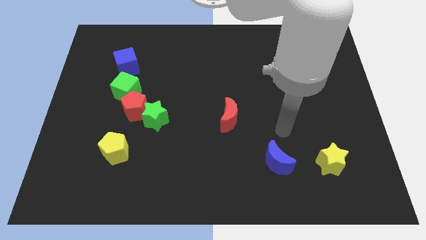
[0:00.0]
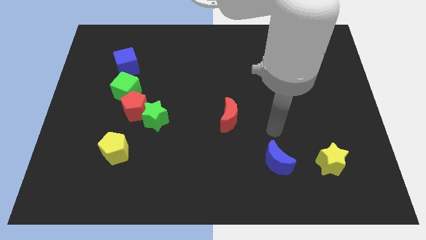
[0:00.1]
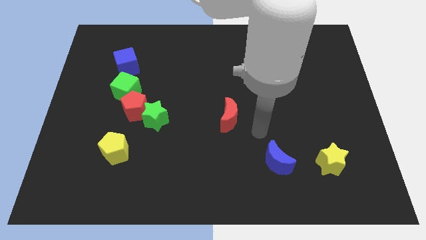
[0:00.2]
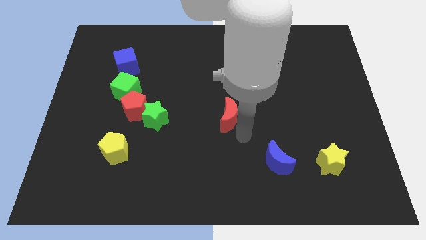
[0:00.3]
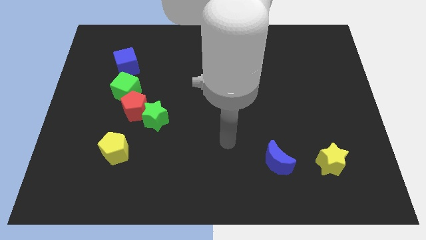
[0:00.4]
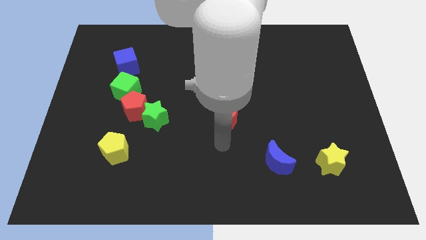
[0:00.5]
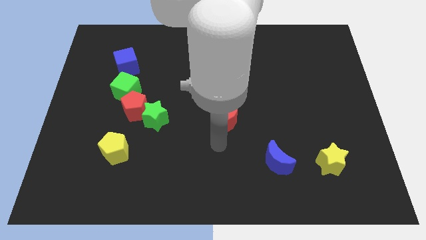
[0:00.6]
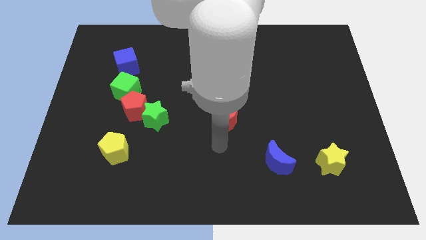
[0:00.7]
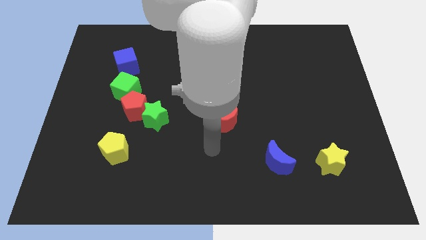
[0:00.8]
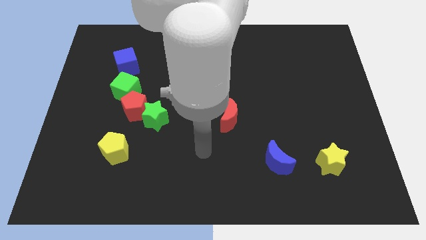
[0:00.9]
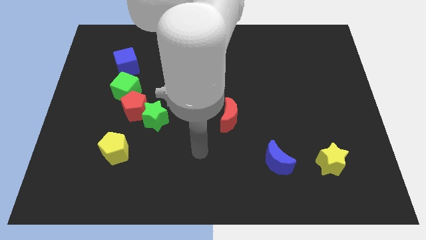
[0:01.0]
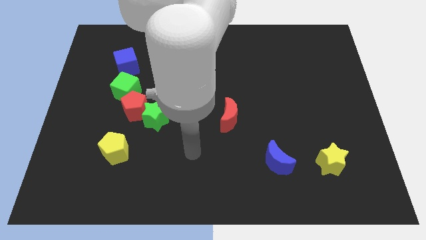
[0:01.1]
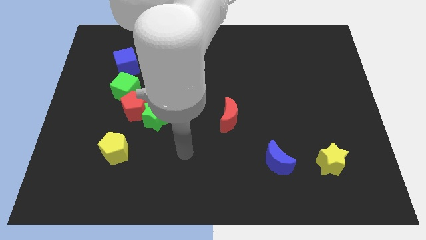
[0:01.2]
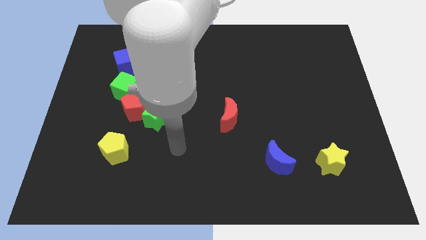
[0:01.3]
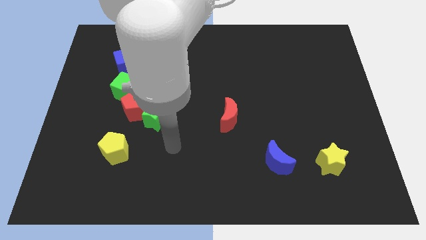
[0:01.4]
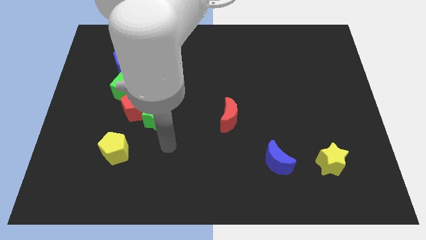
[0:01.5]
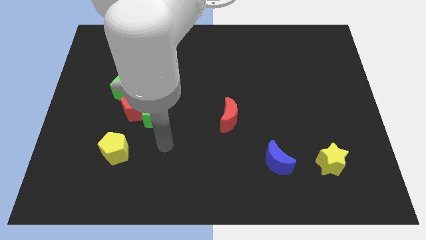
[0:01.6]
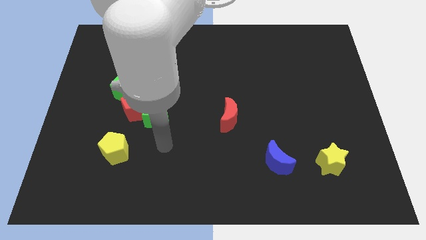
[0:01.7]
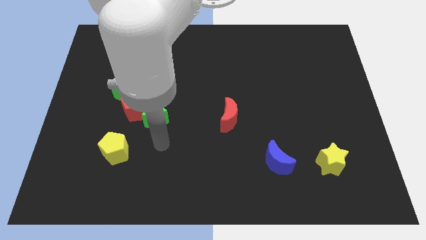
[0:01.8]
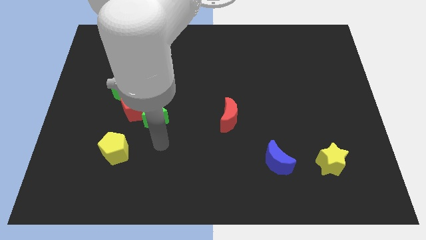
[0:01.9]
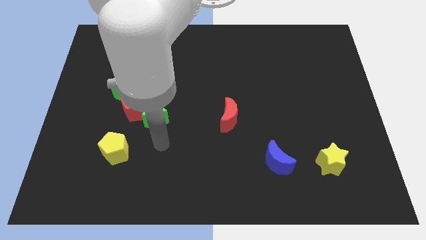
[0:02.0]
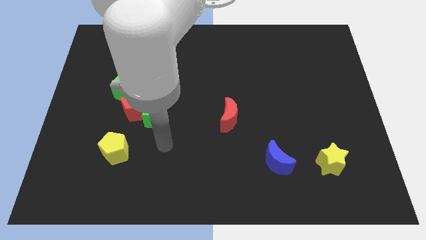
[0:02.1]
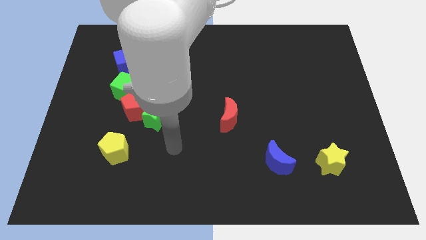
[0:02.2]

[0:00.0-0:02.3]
move your hand below the green star

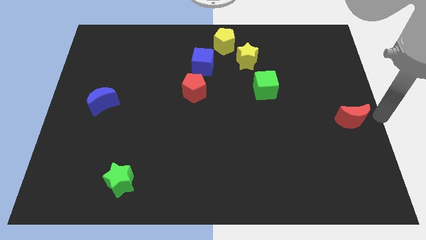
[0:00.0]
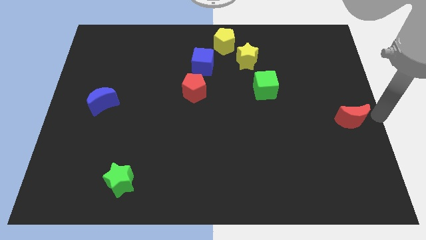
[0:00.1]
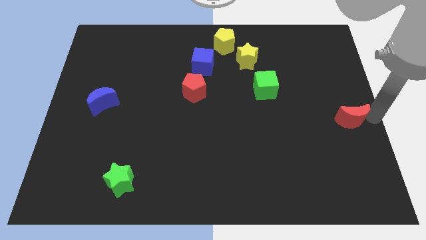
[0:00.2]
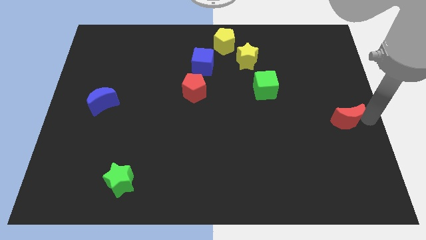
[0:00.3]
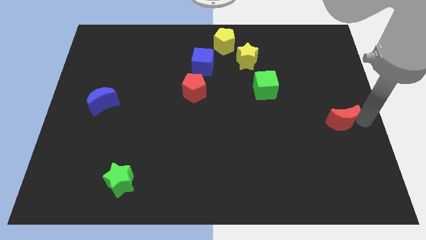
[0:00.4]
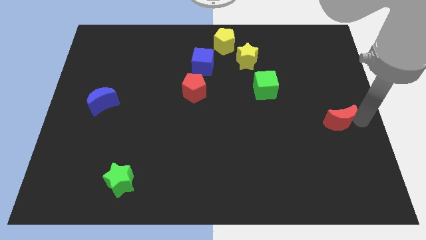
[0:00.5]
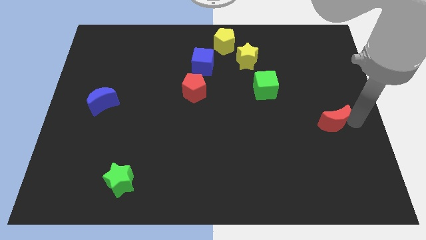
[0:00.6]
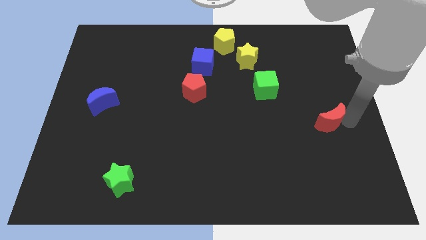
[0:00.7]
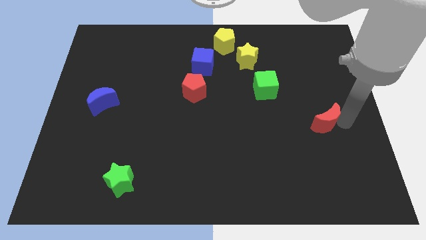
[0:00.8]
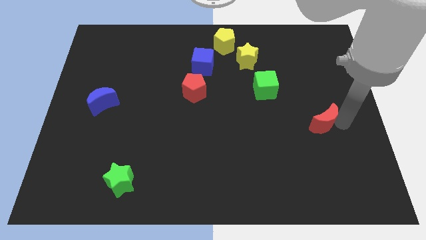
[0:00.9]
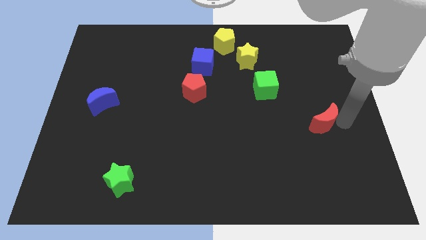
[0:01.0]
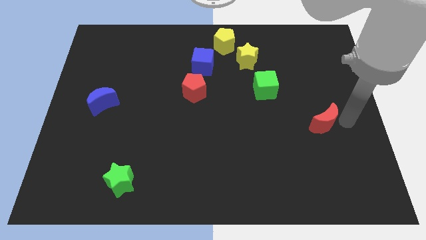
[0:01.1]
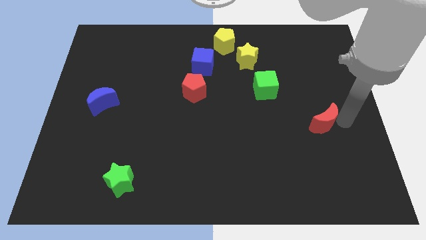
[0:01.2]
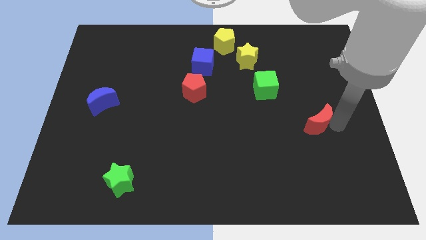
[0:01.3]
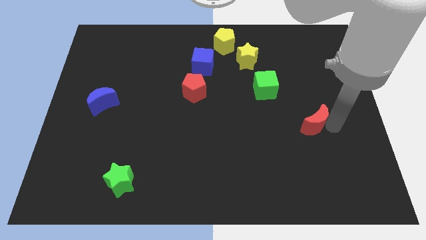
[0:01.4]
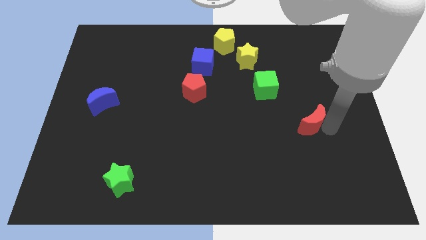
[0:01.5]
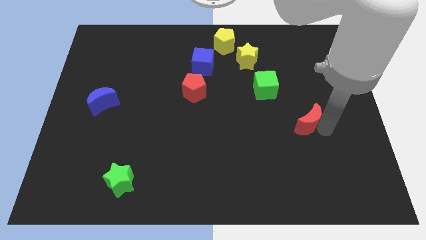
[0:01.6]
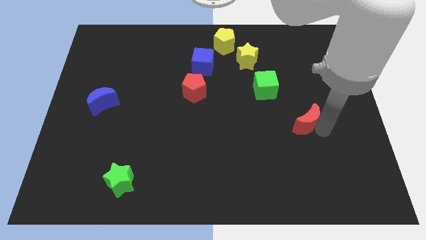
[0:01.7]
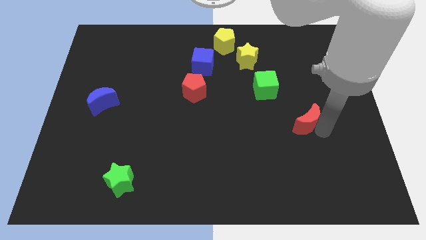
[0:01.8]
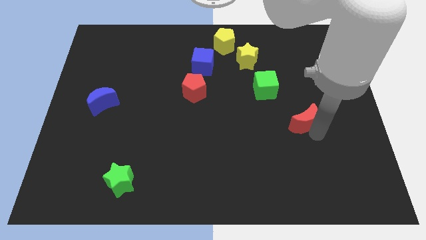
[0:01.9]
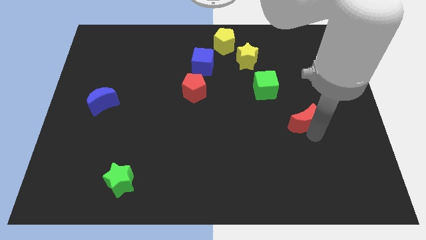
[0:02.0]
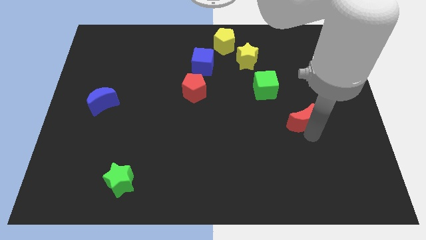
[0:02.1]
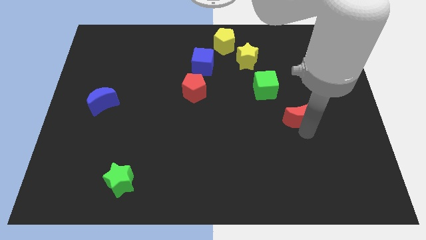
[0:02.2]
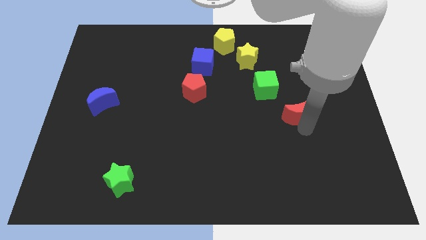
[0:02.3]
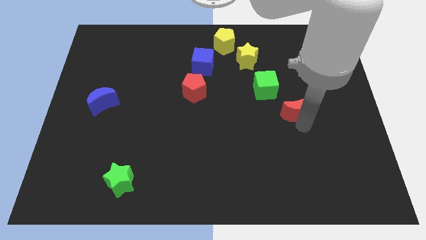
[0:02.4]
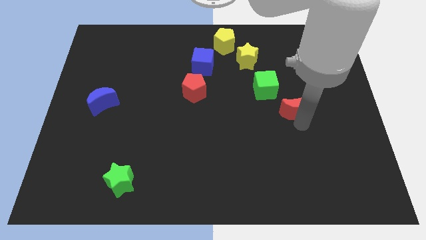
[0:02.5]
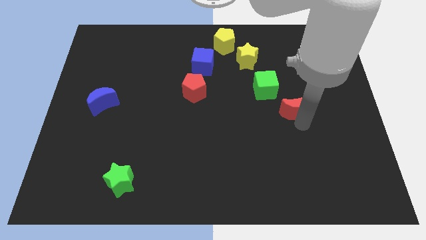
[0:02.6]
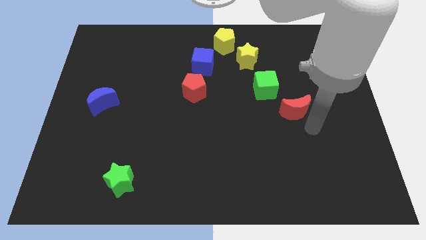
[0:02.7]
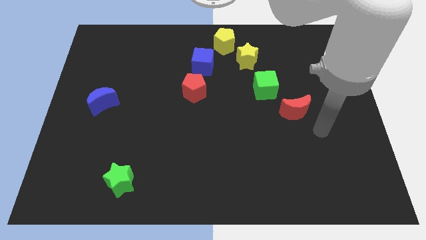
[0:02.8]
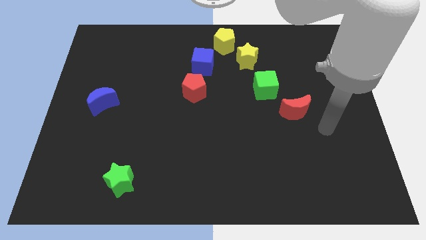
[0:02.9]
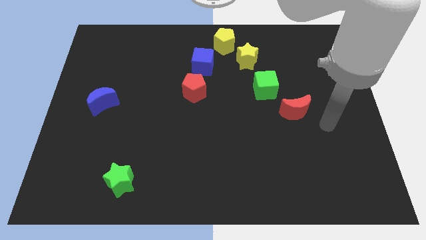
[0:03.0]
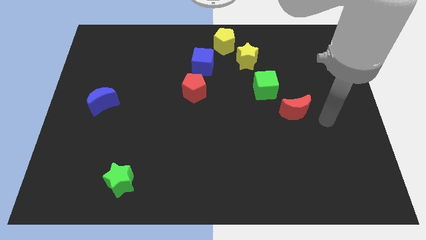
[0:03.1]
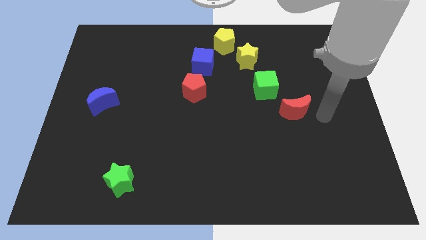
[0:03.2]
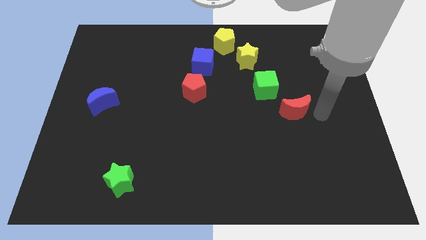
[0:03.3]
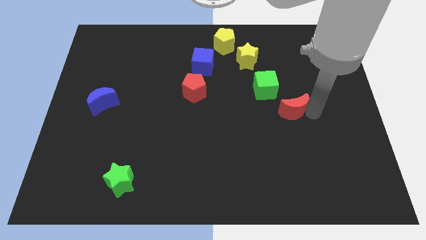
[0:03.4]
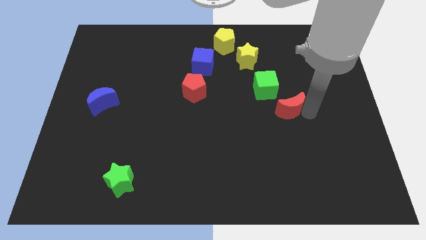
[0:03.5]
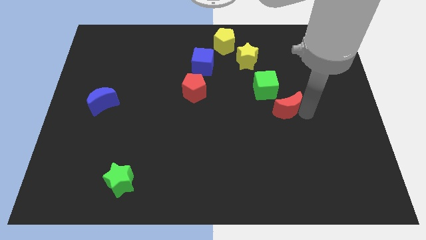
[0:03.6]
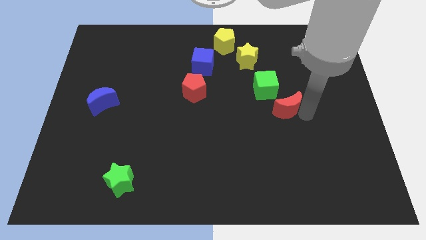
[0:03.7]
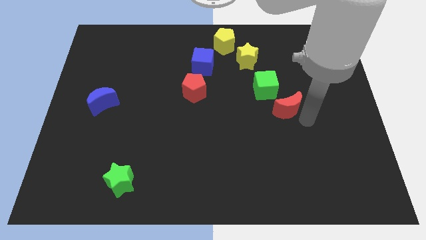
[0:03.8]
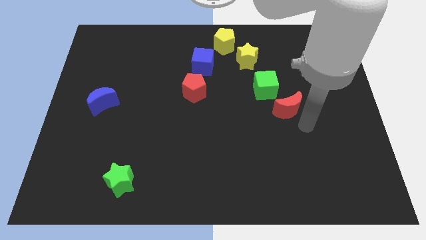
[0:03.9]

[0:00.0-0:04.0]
push red crescent towards left side near green cube

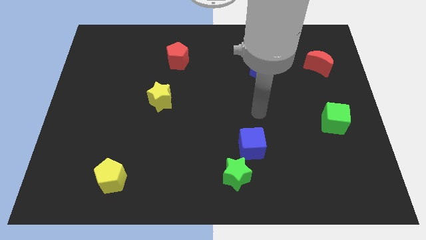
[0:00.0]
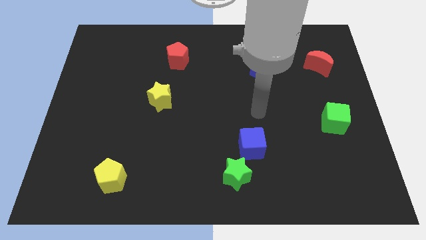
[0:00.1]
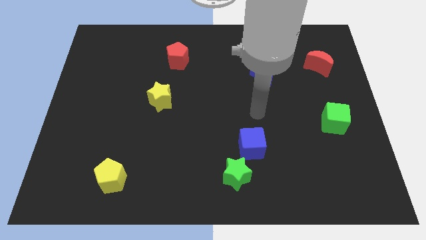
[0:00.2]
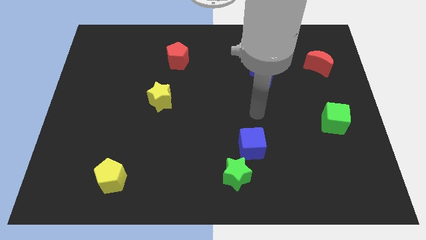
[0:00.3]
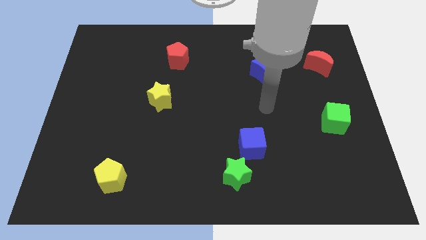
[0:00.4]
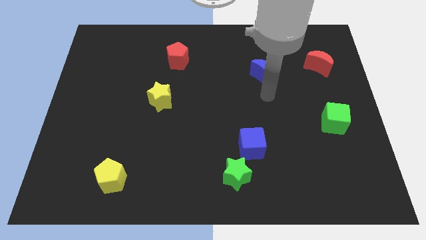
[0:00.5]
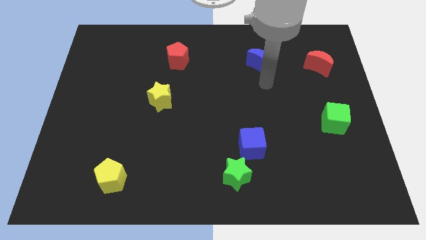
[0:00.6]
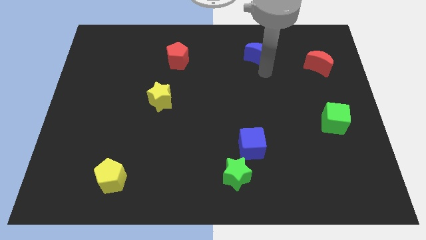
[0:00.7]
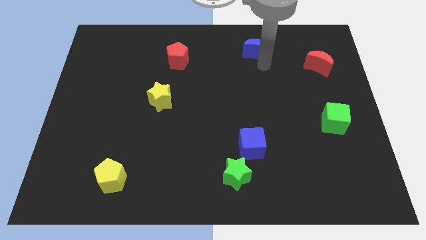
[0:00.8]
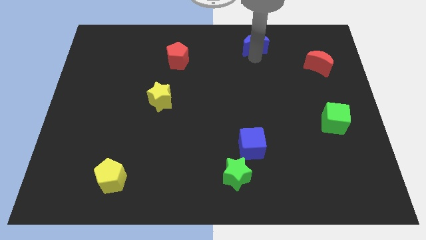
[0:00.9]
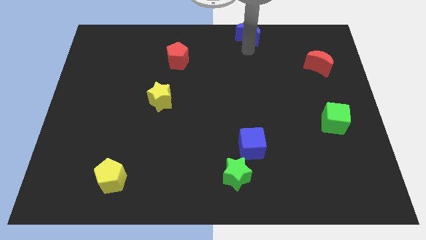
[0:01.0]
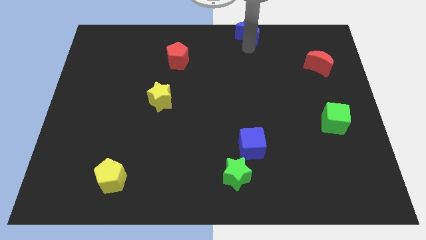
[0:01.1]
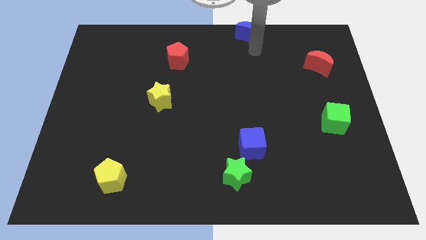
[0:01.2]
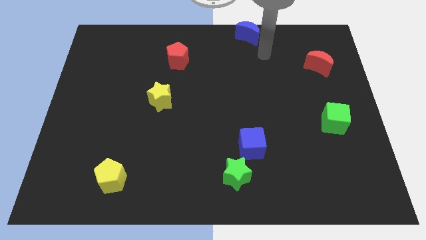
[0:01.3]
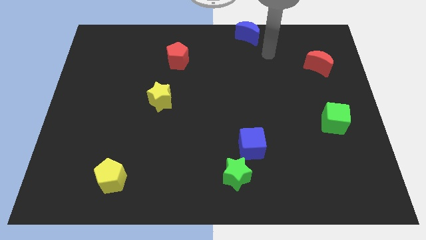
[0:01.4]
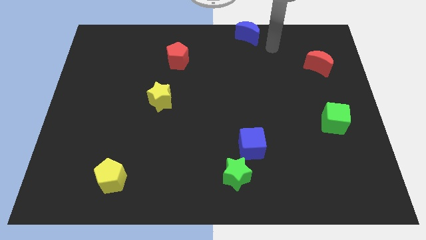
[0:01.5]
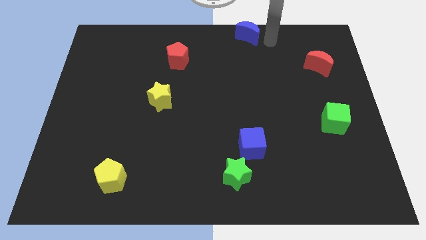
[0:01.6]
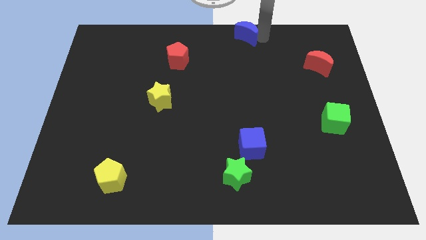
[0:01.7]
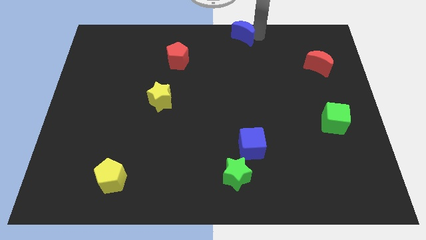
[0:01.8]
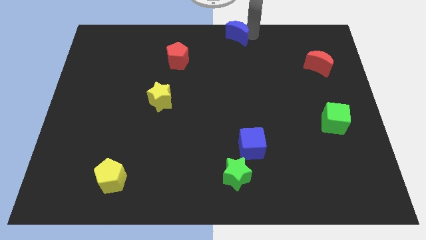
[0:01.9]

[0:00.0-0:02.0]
slide the blue crescent to the top centre of the board

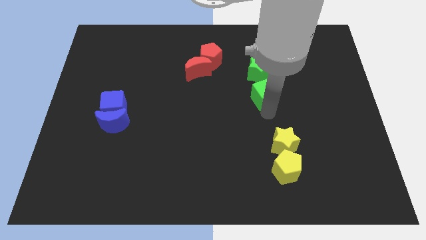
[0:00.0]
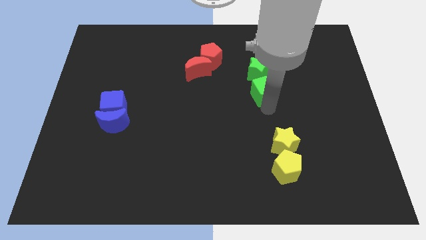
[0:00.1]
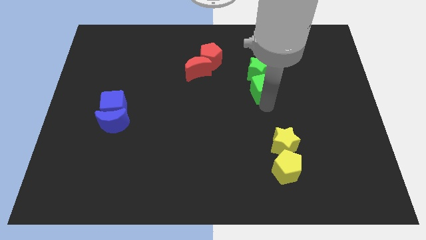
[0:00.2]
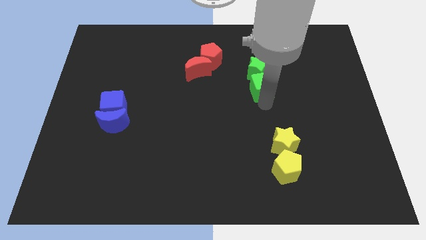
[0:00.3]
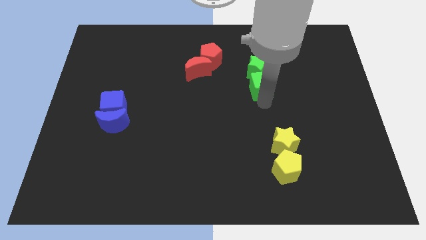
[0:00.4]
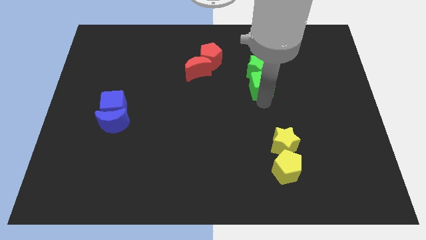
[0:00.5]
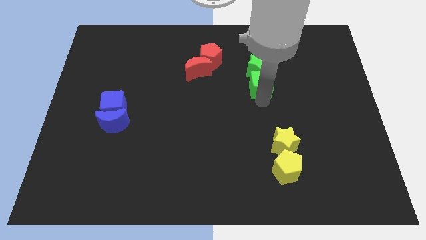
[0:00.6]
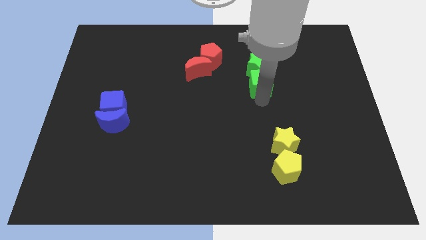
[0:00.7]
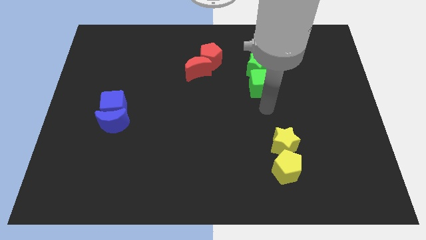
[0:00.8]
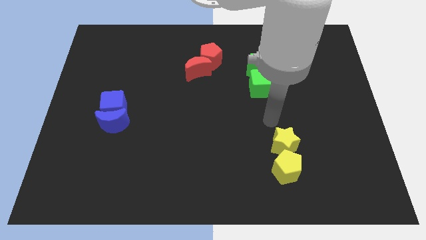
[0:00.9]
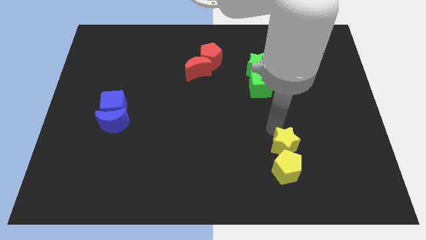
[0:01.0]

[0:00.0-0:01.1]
touch the green cube with the green star
